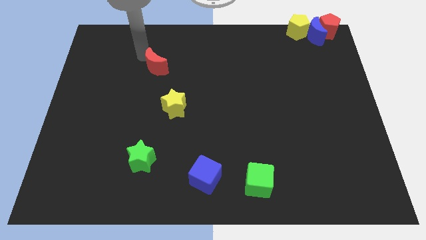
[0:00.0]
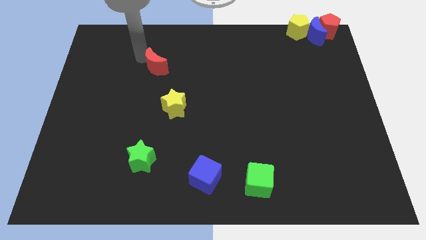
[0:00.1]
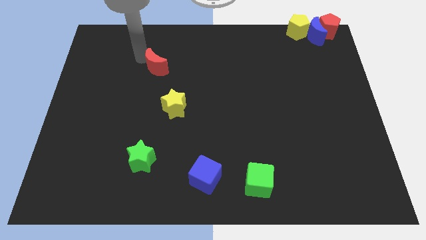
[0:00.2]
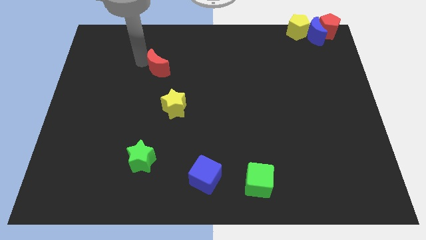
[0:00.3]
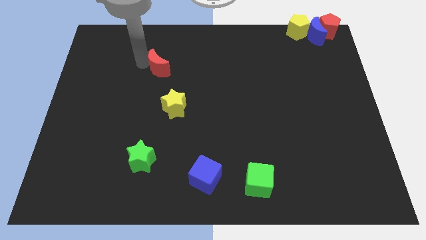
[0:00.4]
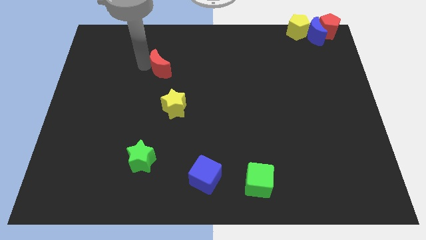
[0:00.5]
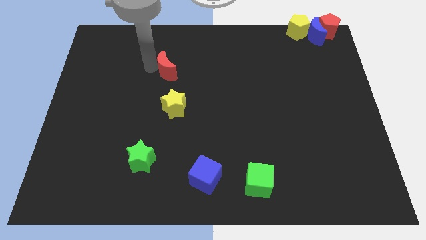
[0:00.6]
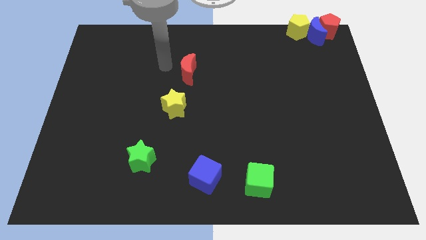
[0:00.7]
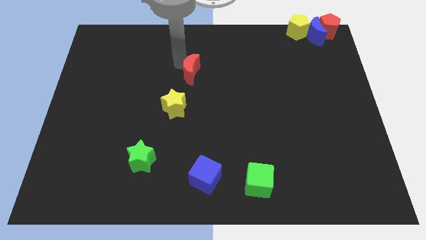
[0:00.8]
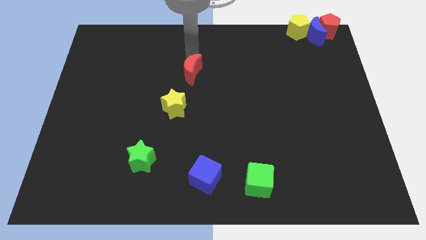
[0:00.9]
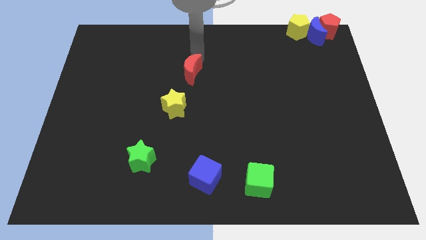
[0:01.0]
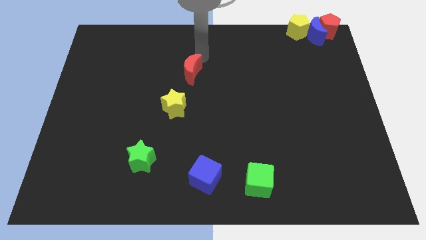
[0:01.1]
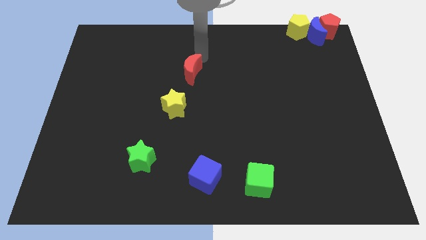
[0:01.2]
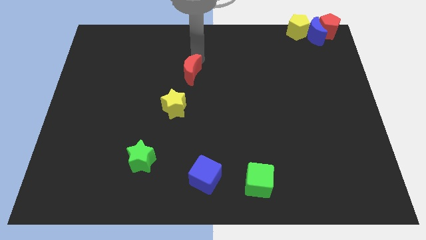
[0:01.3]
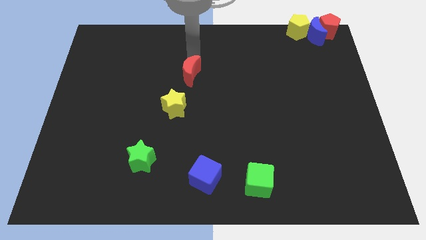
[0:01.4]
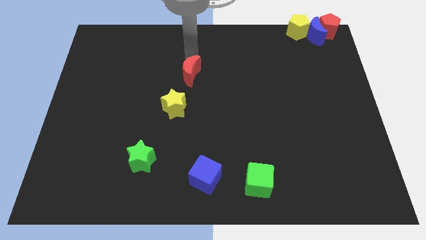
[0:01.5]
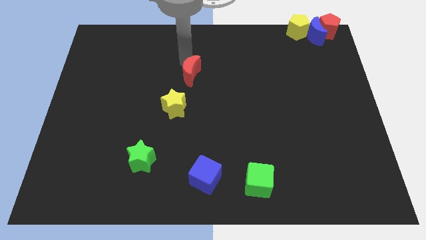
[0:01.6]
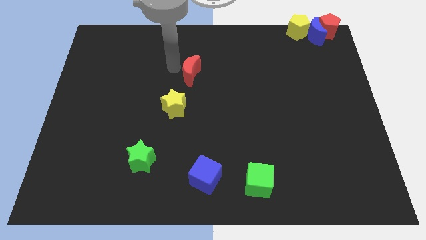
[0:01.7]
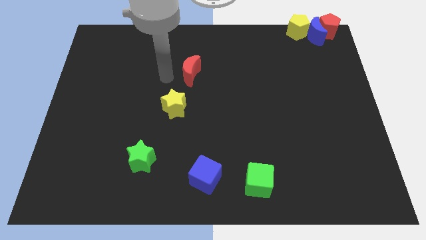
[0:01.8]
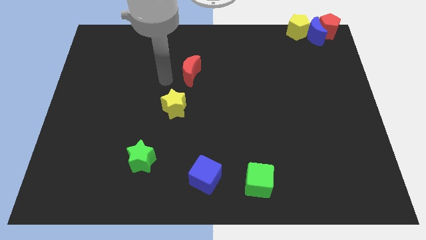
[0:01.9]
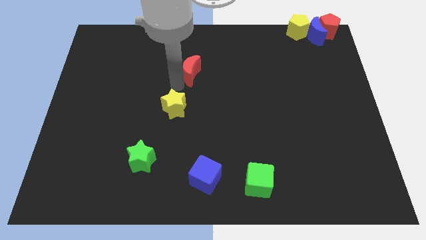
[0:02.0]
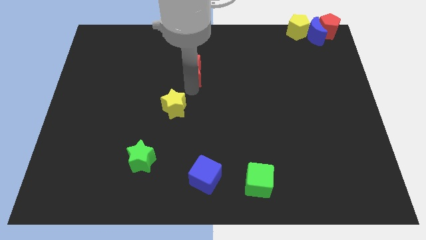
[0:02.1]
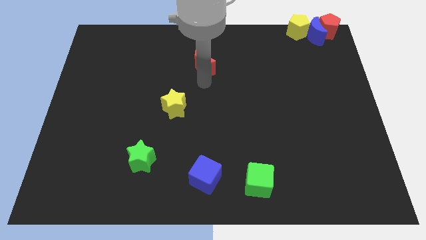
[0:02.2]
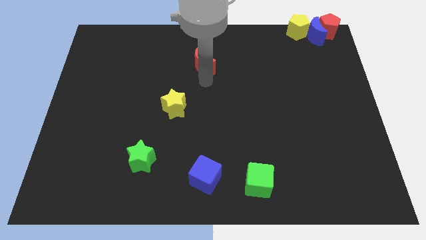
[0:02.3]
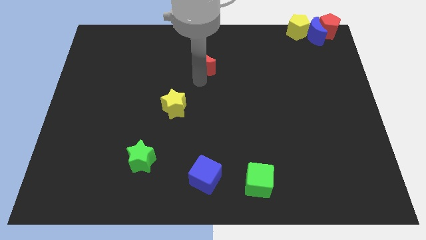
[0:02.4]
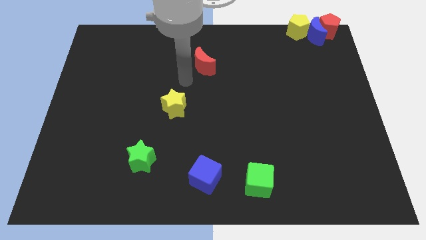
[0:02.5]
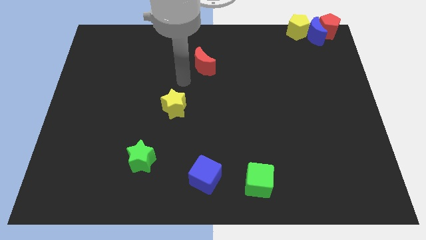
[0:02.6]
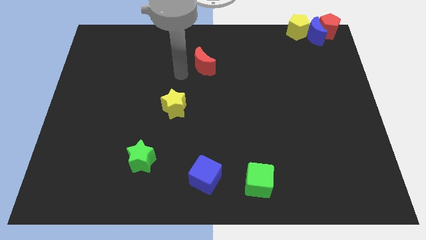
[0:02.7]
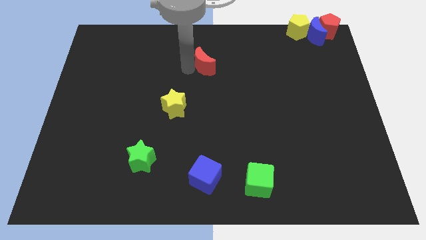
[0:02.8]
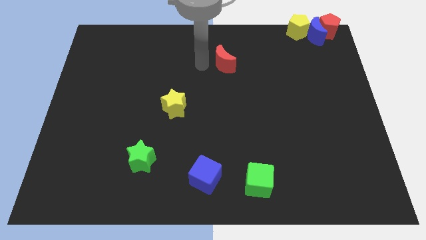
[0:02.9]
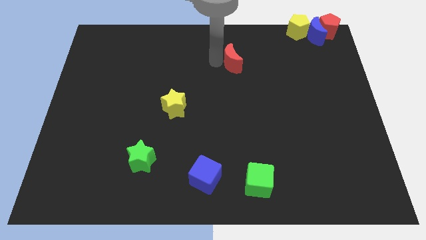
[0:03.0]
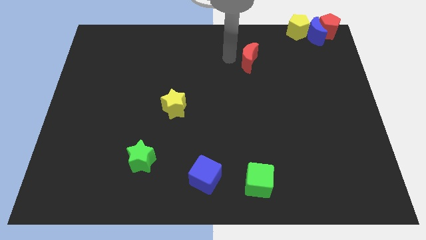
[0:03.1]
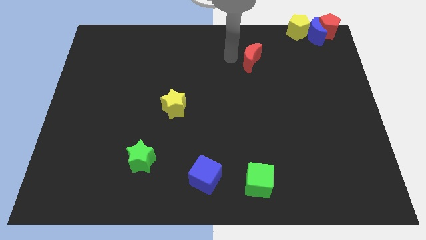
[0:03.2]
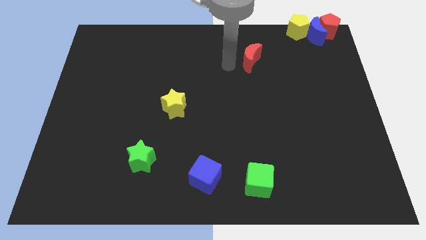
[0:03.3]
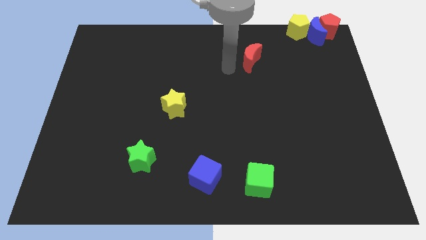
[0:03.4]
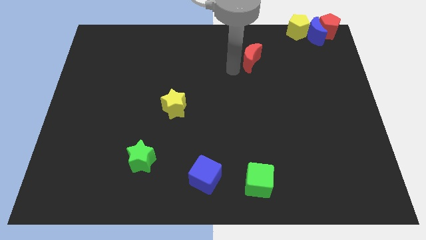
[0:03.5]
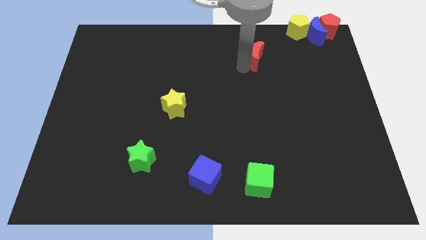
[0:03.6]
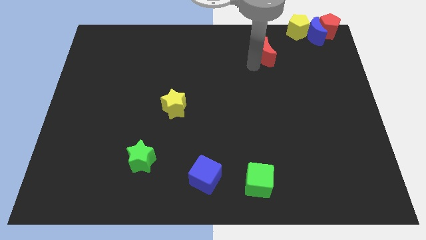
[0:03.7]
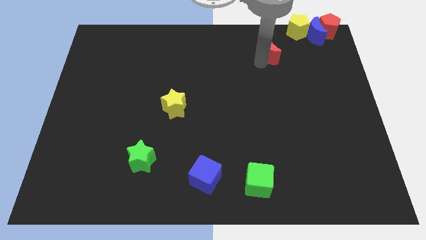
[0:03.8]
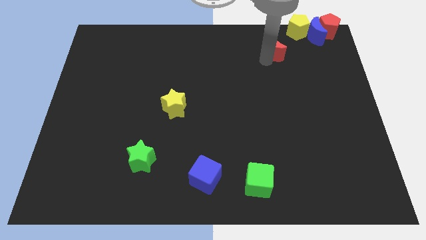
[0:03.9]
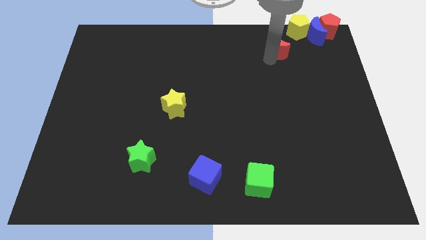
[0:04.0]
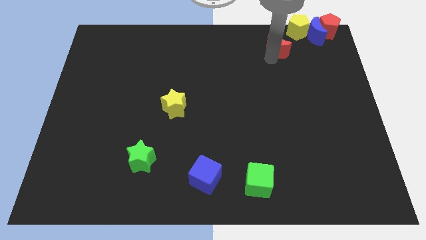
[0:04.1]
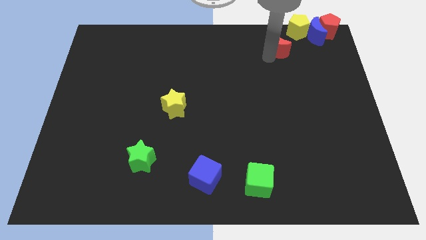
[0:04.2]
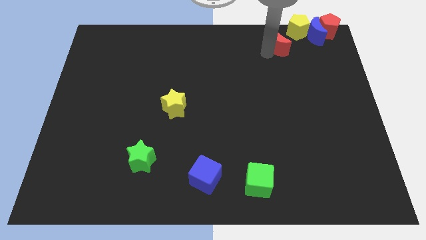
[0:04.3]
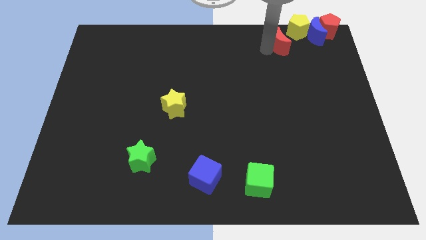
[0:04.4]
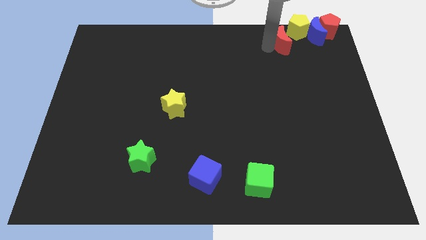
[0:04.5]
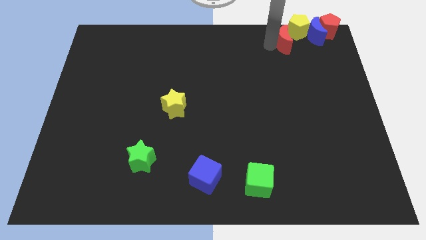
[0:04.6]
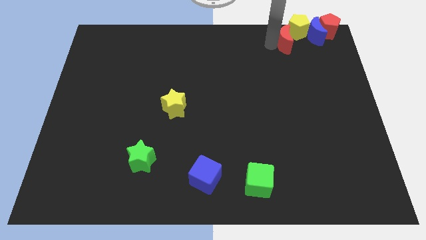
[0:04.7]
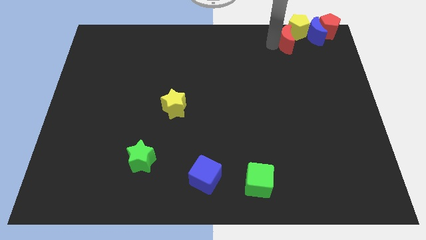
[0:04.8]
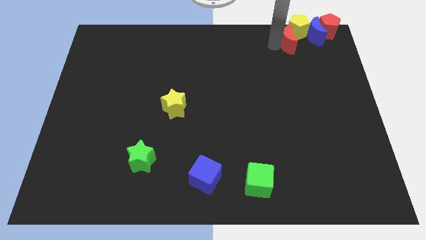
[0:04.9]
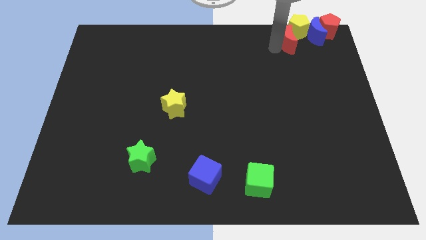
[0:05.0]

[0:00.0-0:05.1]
move red moon towards yellow pentagon

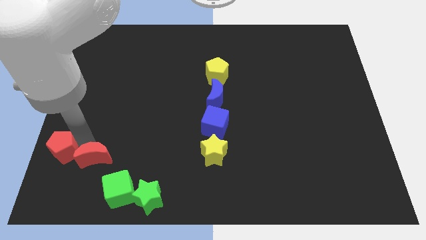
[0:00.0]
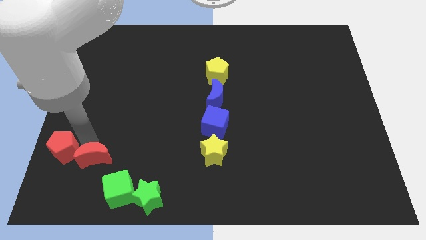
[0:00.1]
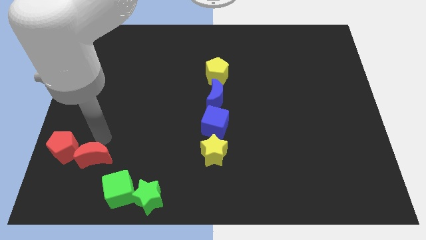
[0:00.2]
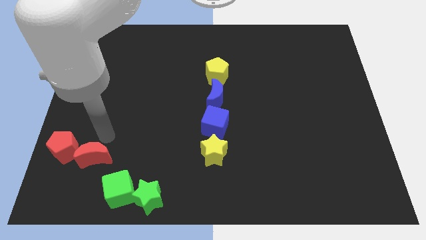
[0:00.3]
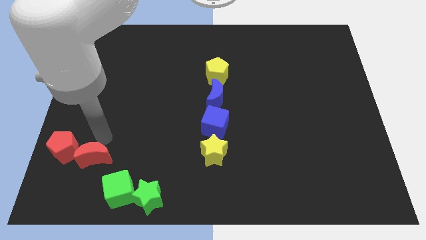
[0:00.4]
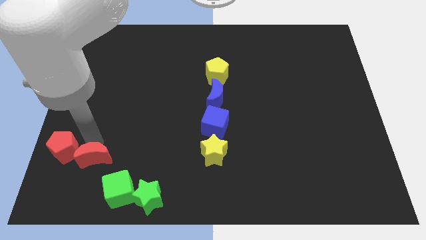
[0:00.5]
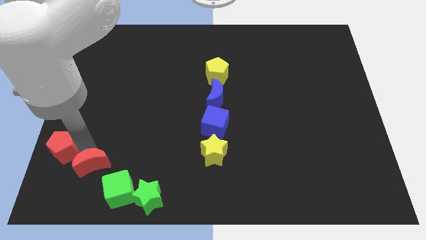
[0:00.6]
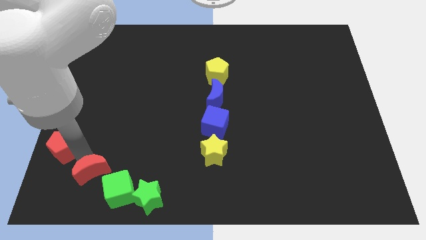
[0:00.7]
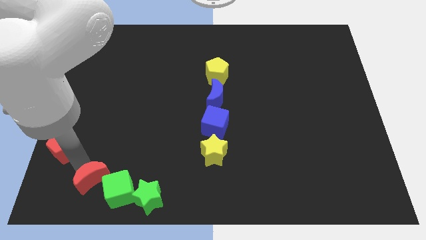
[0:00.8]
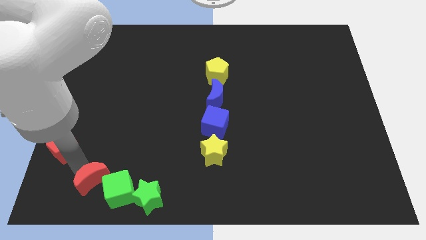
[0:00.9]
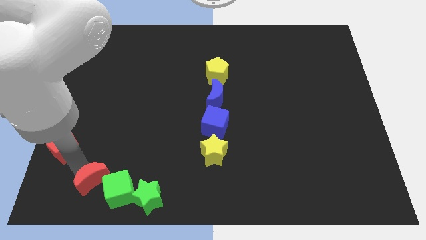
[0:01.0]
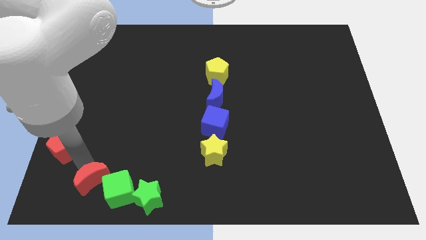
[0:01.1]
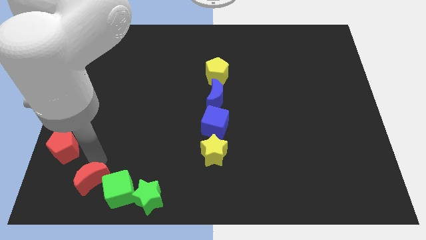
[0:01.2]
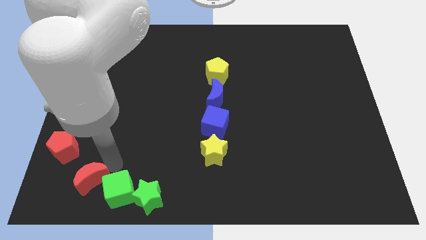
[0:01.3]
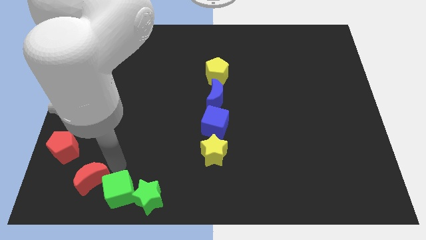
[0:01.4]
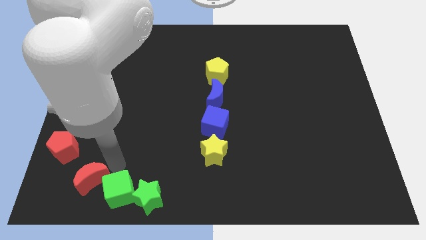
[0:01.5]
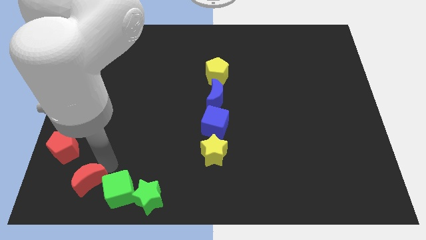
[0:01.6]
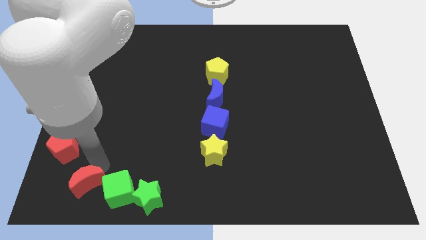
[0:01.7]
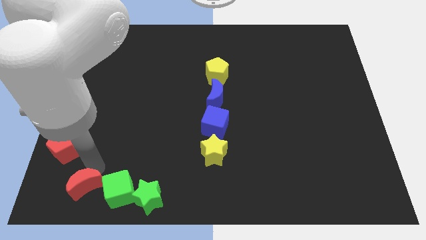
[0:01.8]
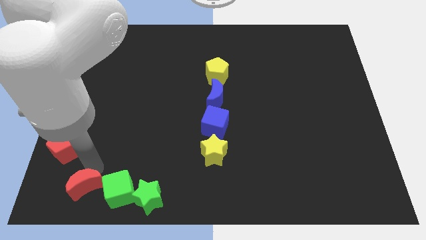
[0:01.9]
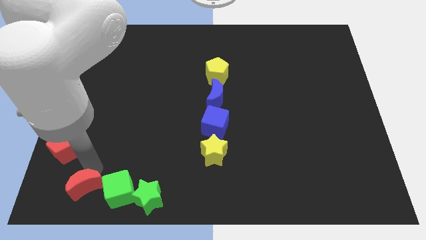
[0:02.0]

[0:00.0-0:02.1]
move the red crescent to the left of the green cube

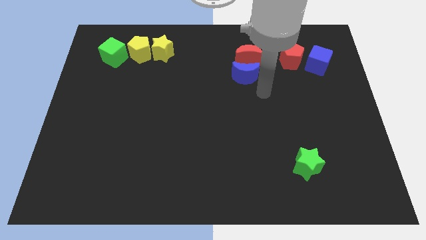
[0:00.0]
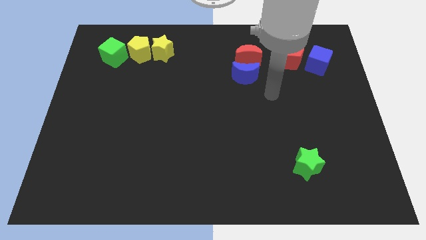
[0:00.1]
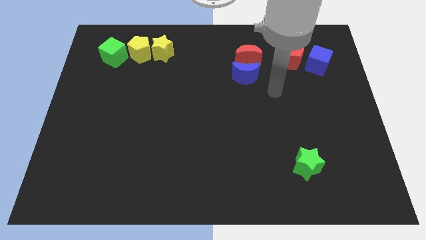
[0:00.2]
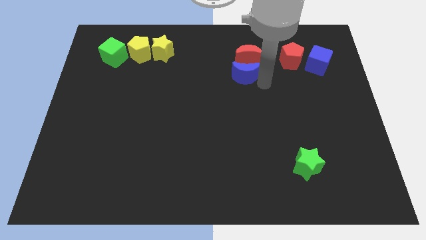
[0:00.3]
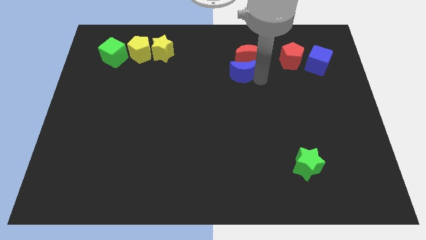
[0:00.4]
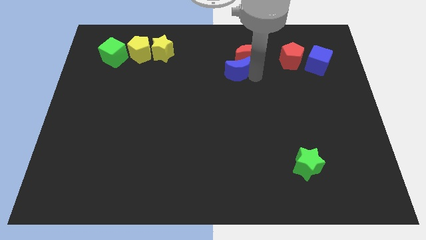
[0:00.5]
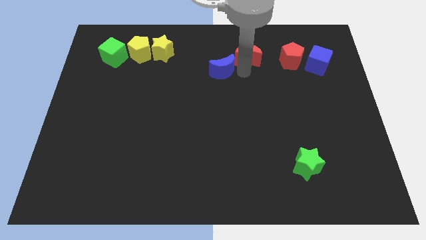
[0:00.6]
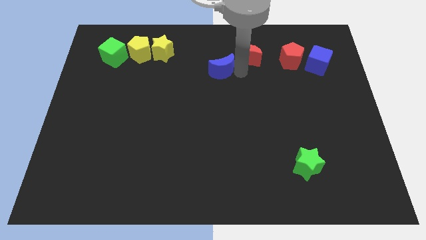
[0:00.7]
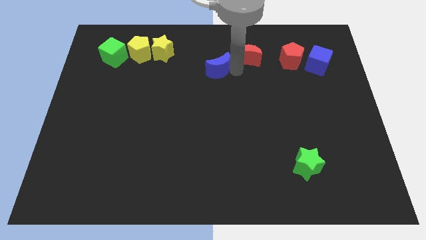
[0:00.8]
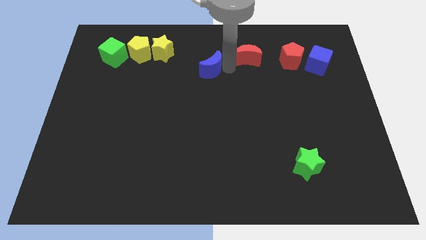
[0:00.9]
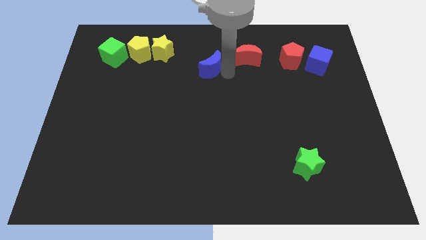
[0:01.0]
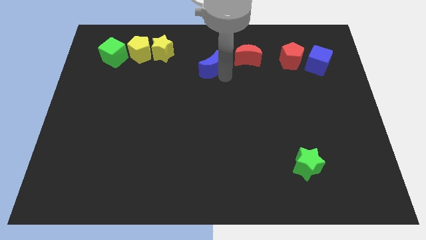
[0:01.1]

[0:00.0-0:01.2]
push the blue moon left to the red moon

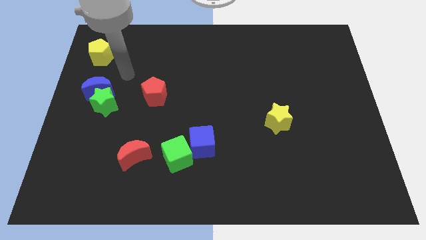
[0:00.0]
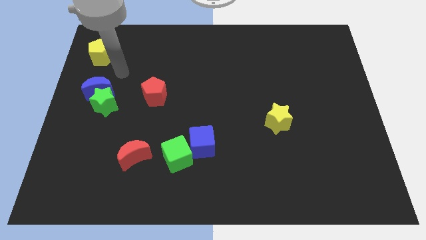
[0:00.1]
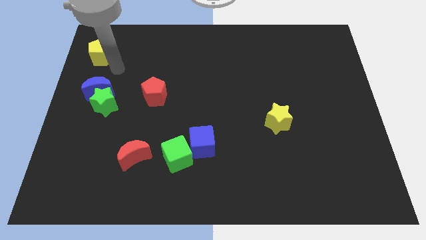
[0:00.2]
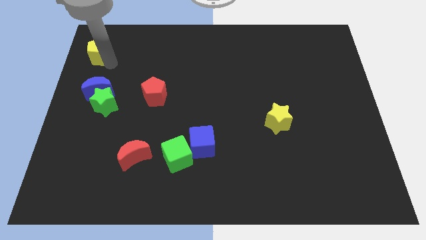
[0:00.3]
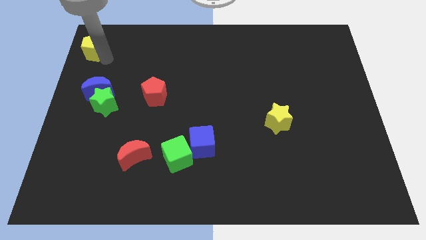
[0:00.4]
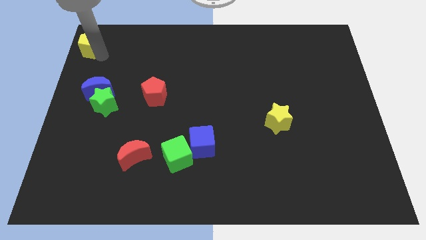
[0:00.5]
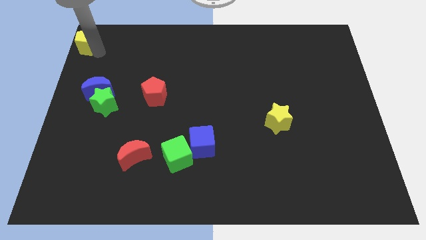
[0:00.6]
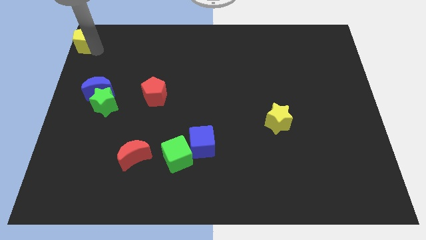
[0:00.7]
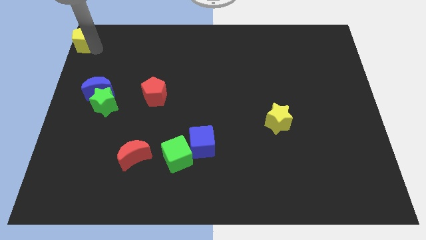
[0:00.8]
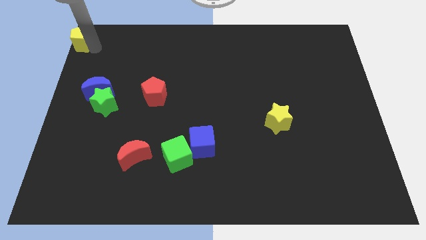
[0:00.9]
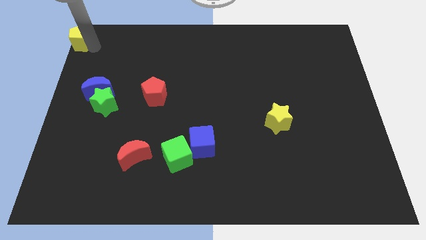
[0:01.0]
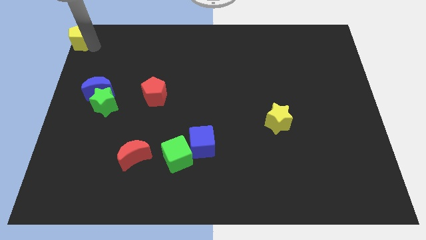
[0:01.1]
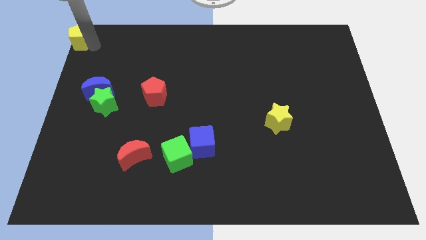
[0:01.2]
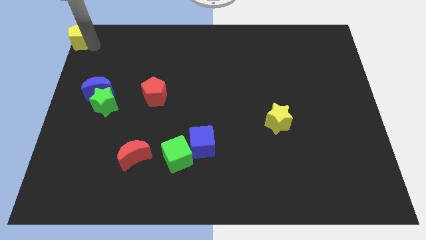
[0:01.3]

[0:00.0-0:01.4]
move the yellow pentagon diagonally at the top left of the blue crescent
